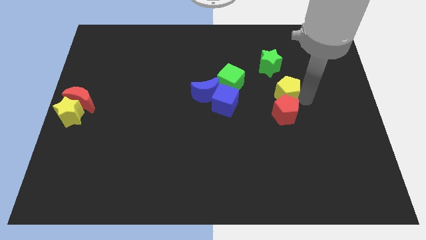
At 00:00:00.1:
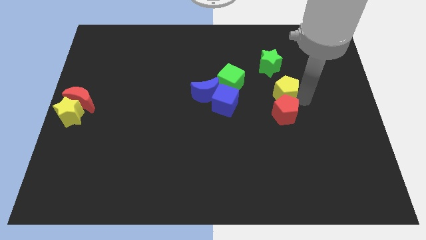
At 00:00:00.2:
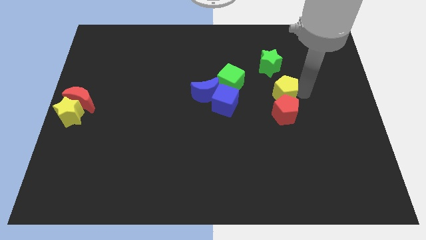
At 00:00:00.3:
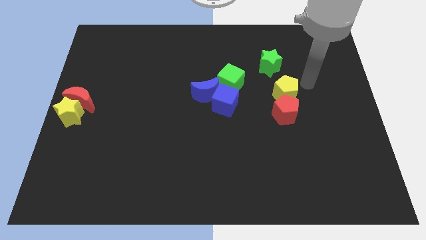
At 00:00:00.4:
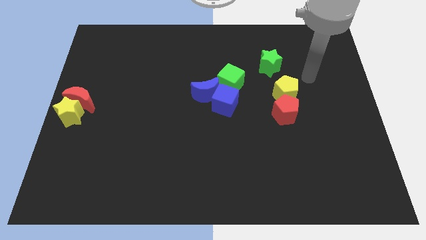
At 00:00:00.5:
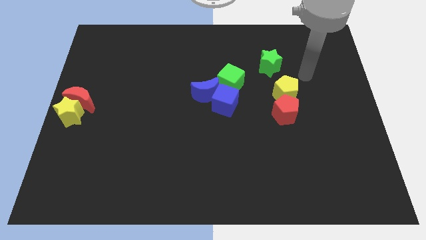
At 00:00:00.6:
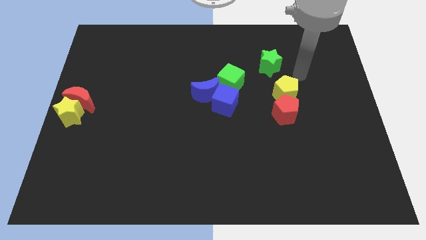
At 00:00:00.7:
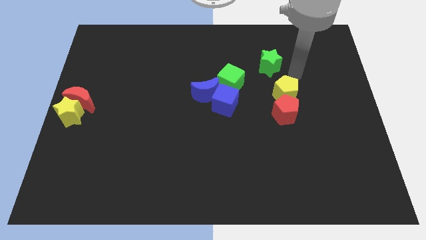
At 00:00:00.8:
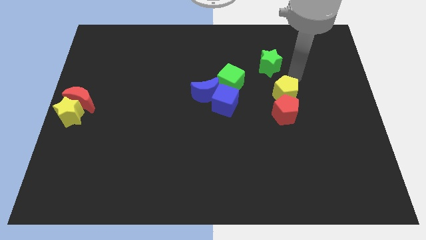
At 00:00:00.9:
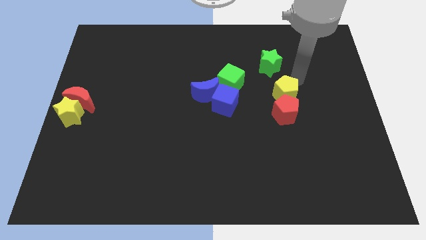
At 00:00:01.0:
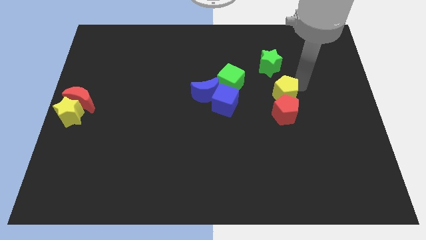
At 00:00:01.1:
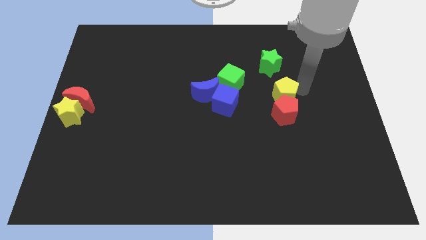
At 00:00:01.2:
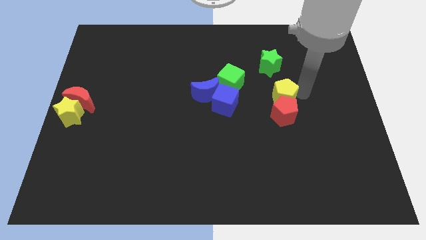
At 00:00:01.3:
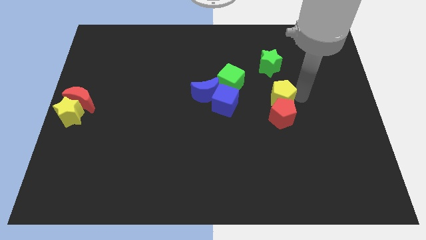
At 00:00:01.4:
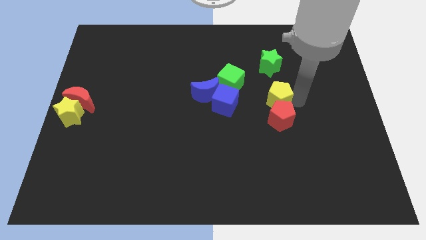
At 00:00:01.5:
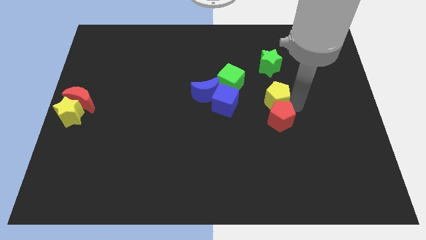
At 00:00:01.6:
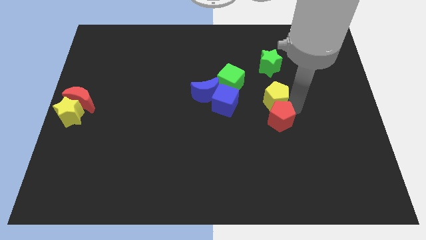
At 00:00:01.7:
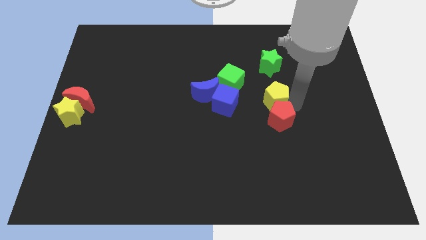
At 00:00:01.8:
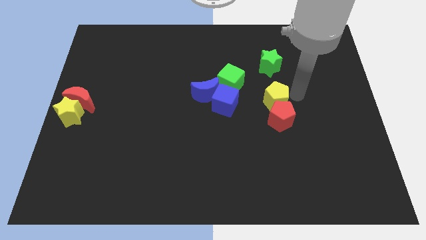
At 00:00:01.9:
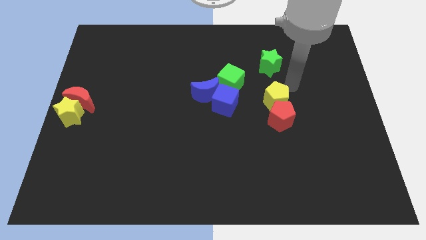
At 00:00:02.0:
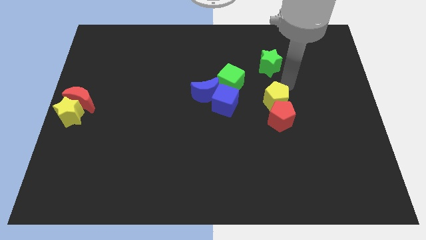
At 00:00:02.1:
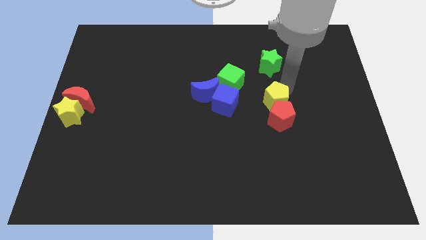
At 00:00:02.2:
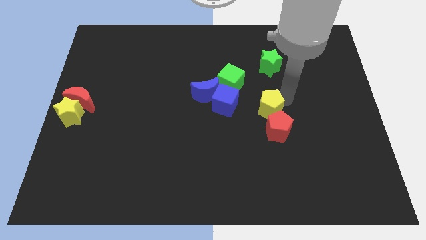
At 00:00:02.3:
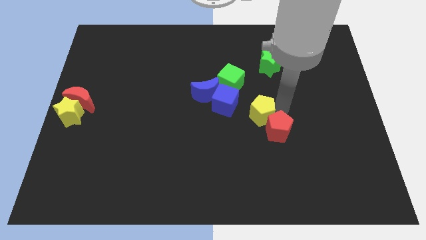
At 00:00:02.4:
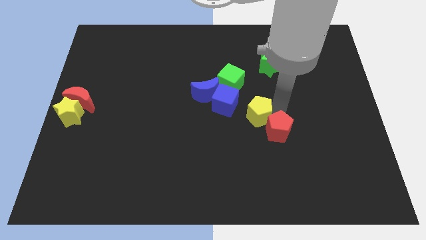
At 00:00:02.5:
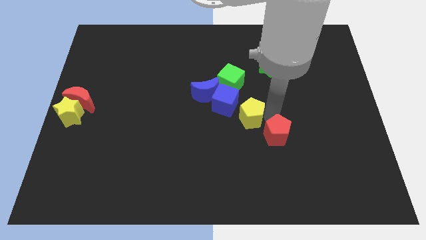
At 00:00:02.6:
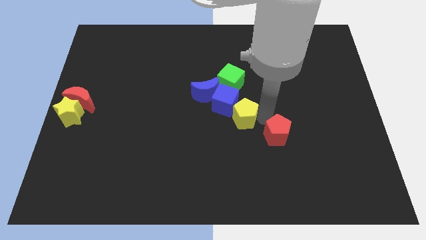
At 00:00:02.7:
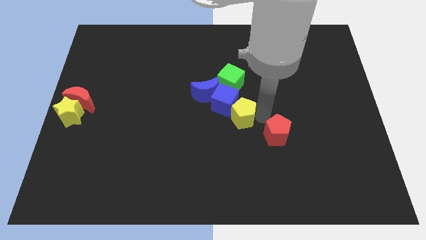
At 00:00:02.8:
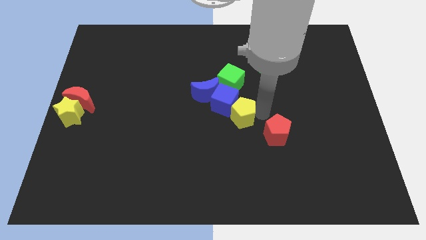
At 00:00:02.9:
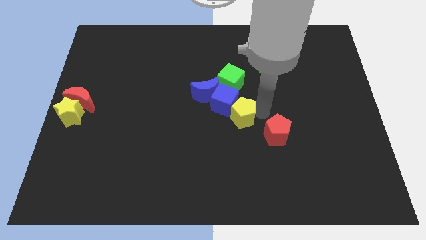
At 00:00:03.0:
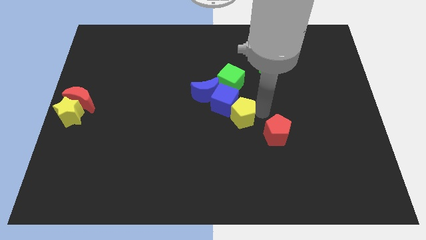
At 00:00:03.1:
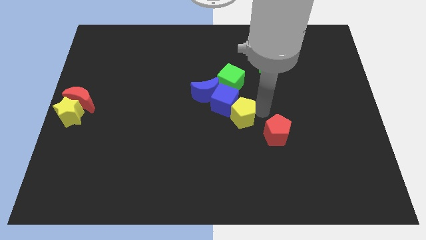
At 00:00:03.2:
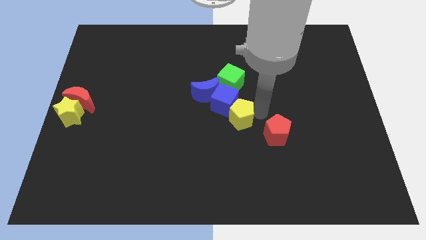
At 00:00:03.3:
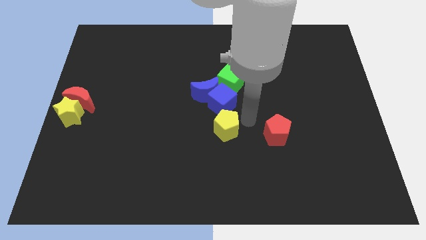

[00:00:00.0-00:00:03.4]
adjust the yellow pentagon at the bottom of the blue cube

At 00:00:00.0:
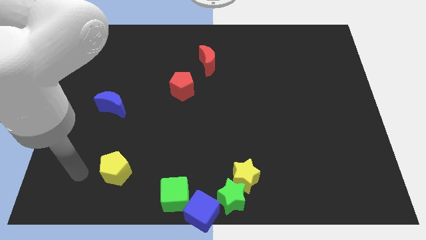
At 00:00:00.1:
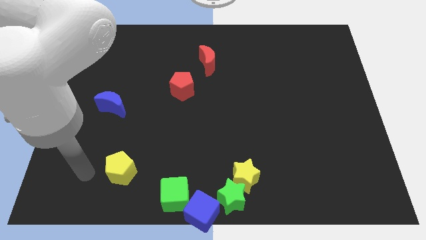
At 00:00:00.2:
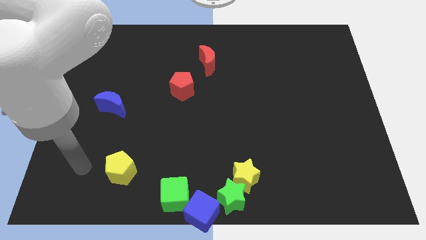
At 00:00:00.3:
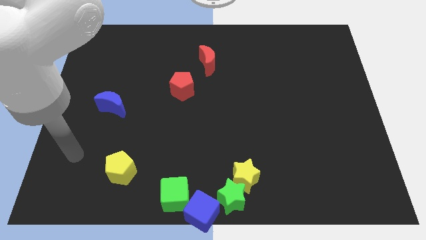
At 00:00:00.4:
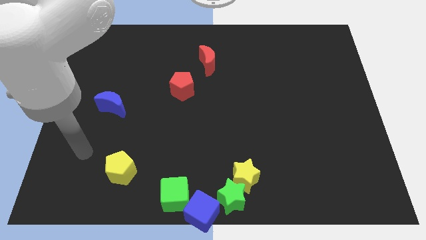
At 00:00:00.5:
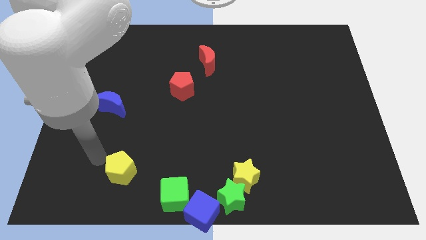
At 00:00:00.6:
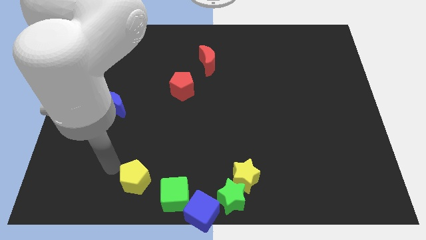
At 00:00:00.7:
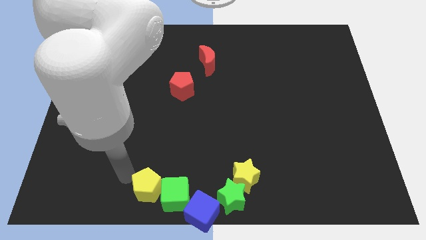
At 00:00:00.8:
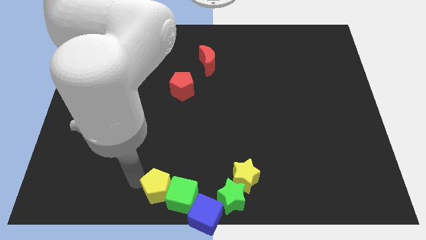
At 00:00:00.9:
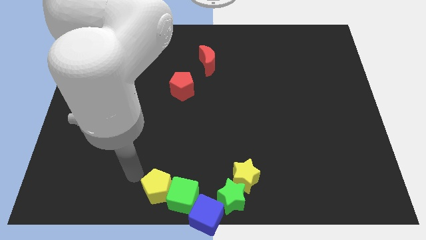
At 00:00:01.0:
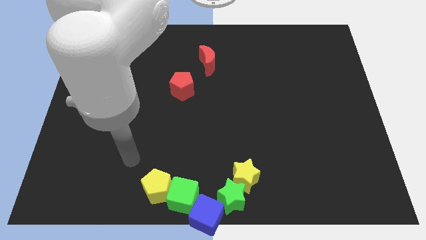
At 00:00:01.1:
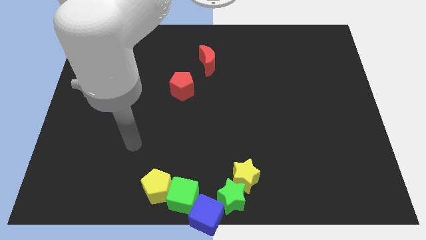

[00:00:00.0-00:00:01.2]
push the yellow pentagon into the blue cube

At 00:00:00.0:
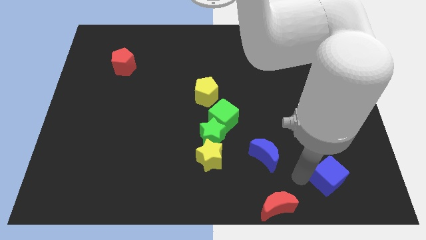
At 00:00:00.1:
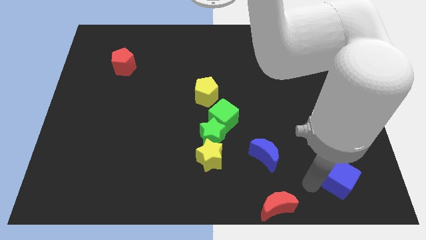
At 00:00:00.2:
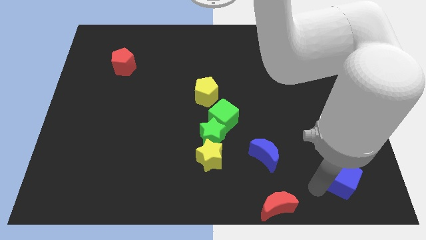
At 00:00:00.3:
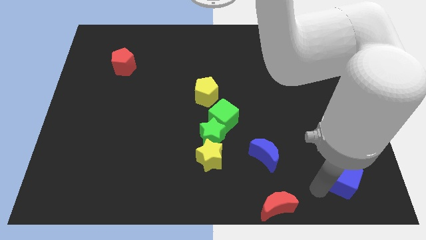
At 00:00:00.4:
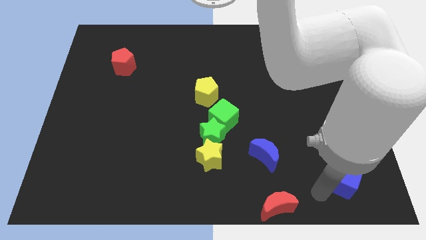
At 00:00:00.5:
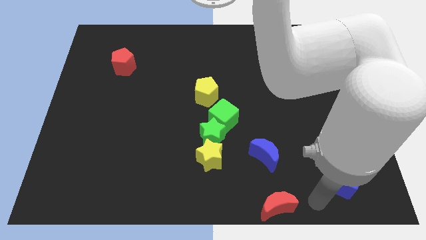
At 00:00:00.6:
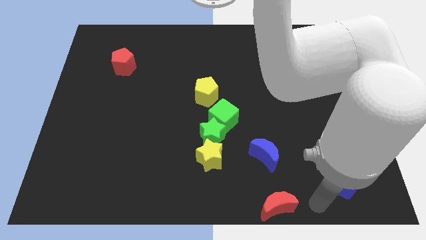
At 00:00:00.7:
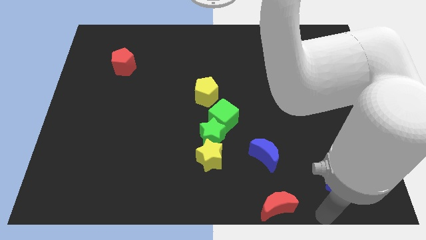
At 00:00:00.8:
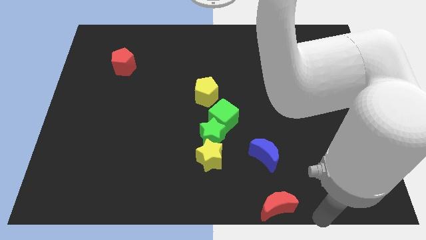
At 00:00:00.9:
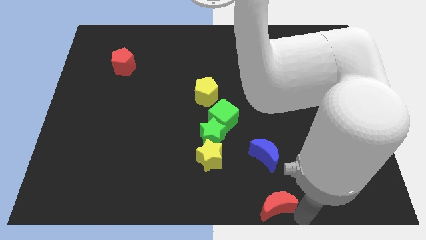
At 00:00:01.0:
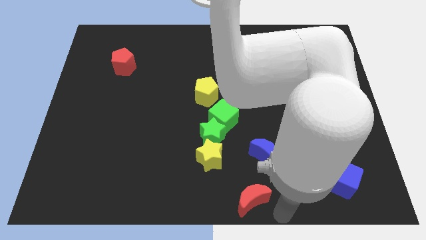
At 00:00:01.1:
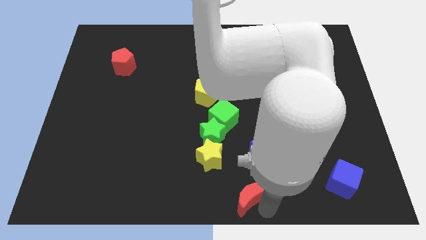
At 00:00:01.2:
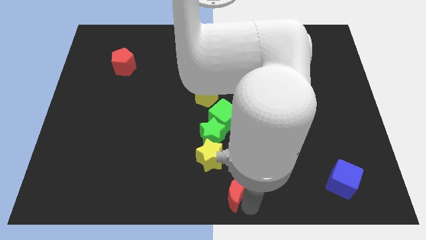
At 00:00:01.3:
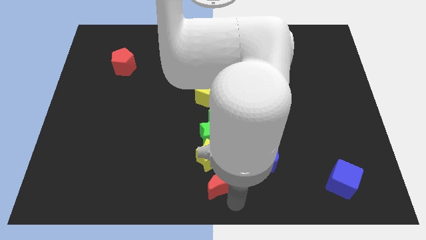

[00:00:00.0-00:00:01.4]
move the red crescent below the yellow star

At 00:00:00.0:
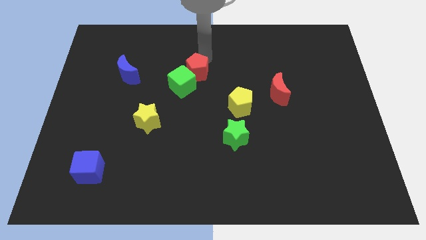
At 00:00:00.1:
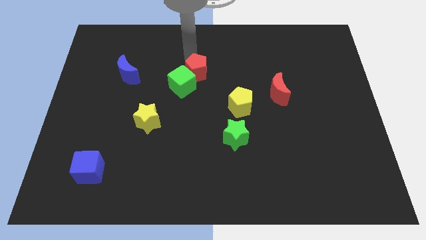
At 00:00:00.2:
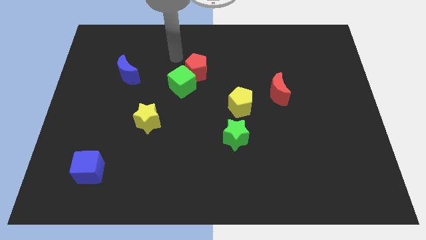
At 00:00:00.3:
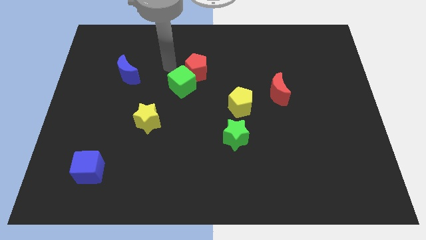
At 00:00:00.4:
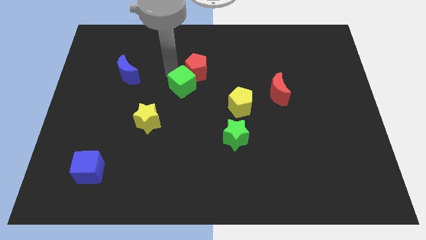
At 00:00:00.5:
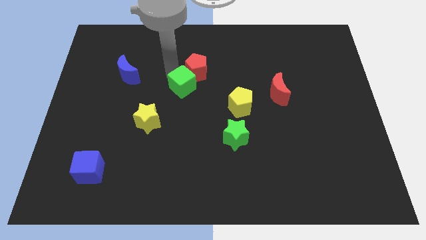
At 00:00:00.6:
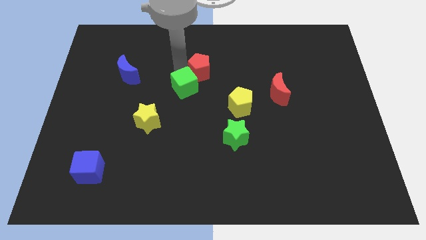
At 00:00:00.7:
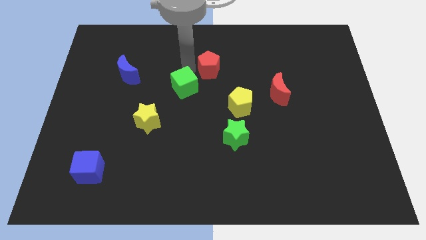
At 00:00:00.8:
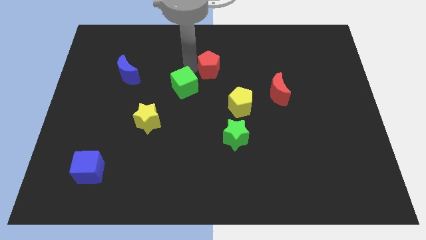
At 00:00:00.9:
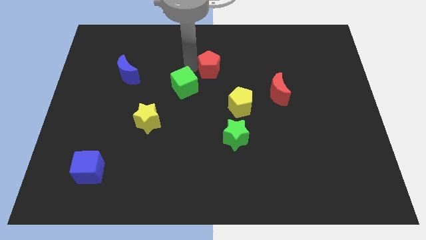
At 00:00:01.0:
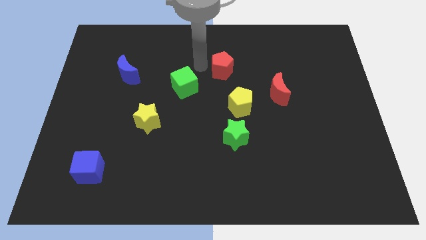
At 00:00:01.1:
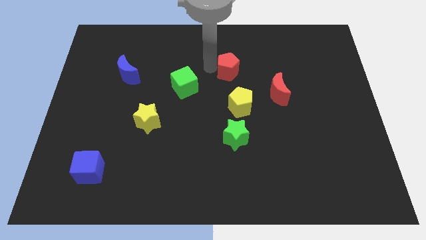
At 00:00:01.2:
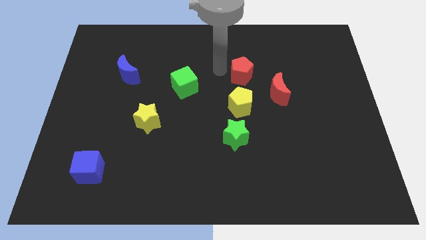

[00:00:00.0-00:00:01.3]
place the red pentagon vertically to the yellow pentagon

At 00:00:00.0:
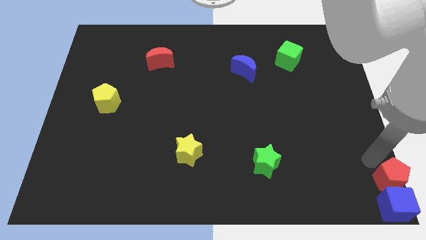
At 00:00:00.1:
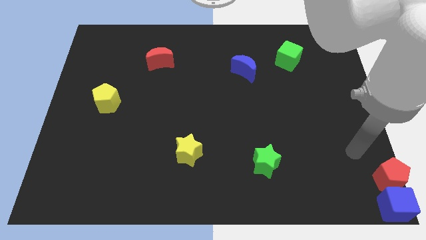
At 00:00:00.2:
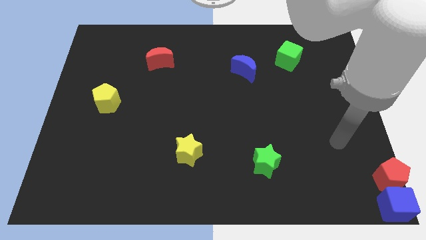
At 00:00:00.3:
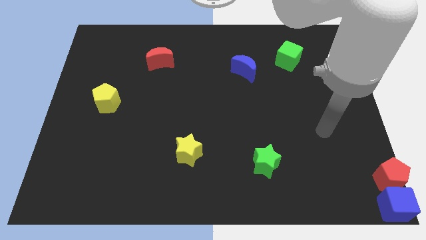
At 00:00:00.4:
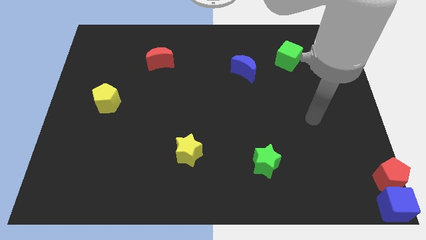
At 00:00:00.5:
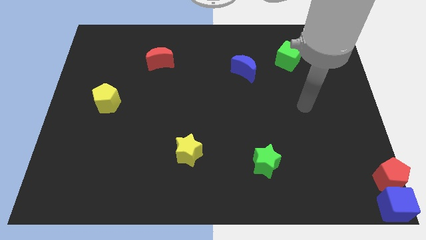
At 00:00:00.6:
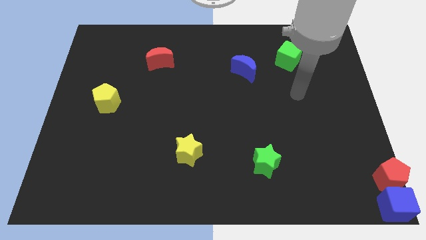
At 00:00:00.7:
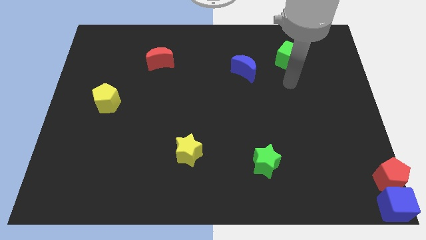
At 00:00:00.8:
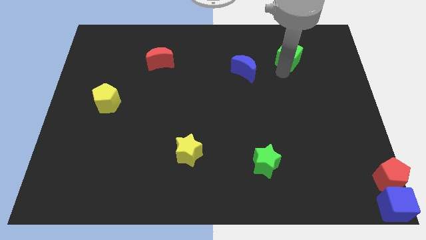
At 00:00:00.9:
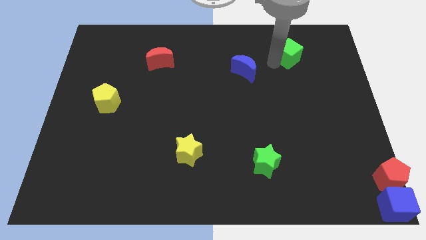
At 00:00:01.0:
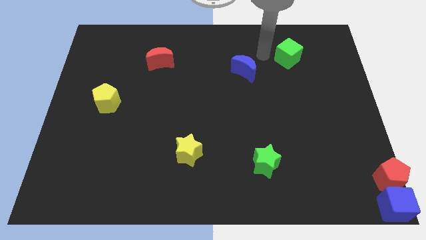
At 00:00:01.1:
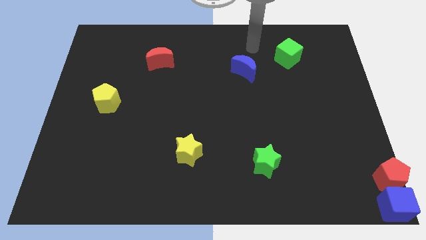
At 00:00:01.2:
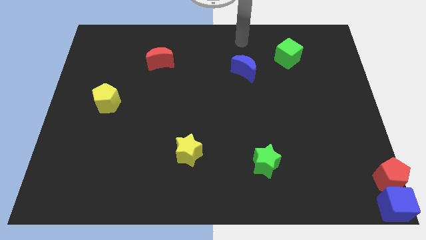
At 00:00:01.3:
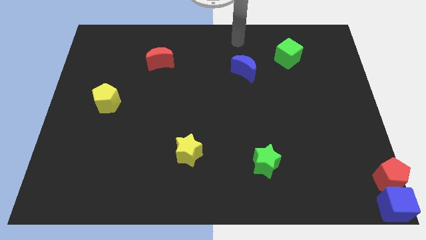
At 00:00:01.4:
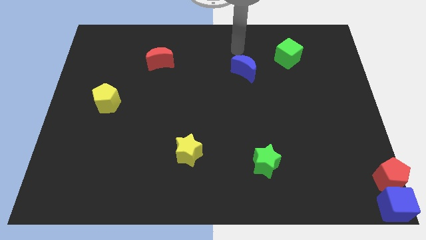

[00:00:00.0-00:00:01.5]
place your hand above the blue crescent
